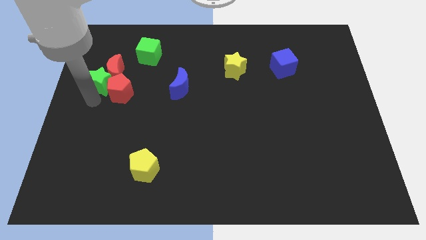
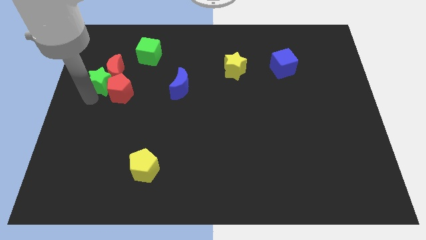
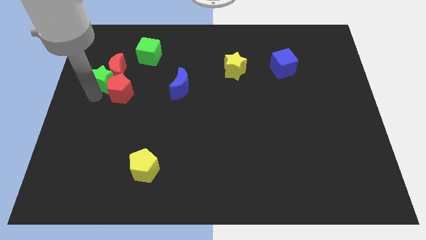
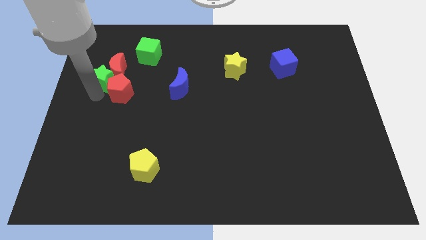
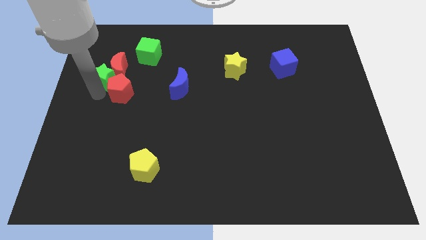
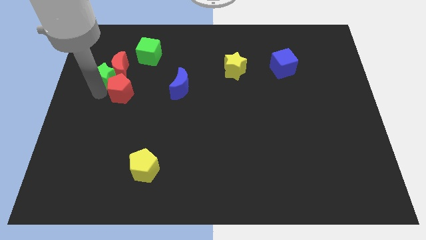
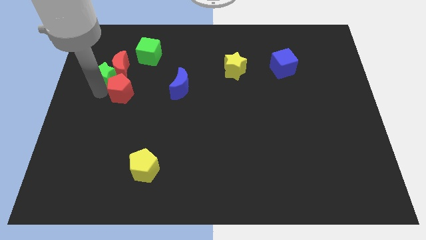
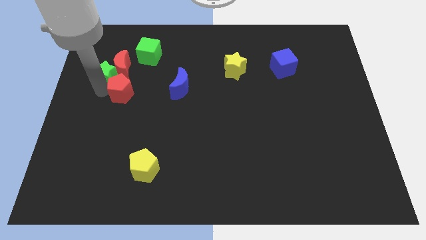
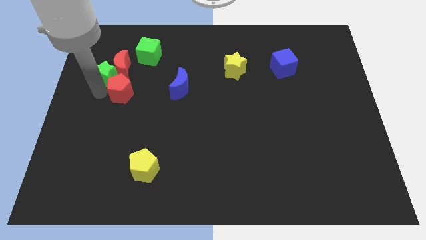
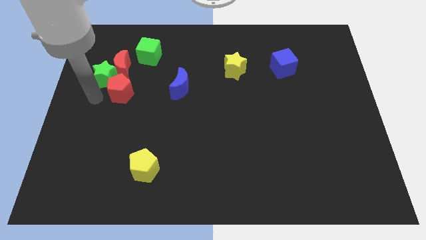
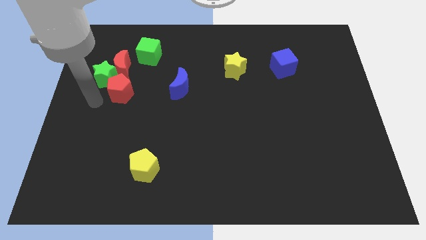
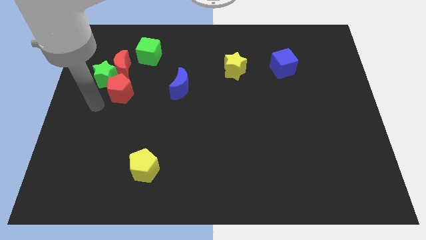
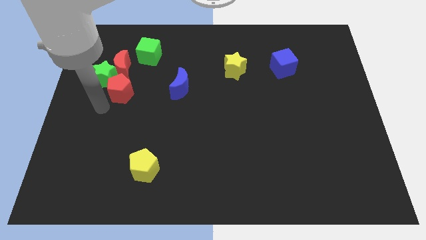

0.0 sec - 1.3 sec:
push the green star into the red crescent

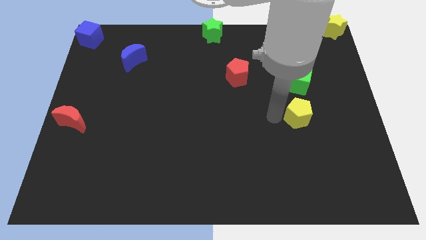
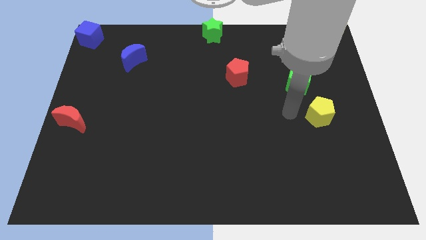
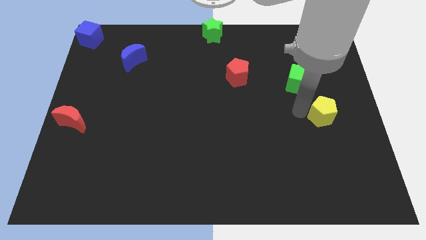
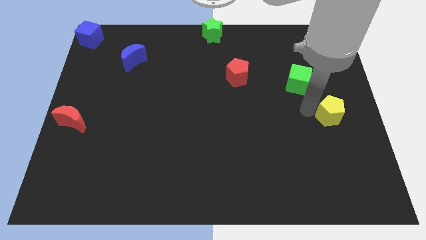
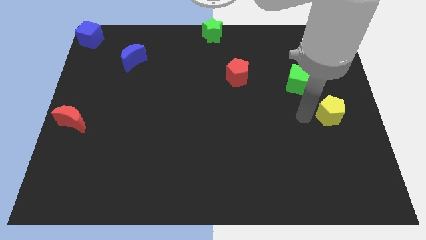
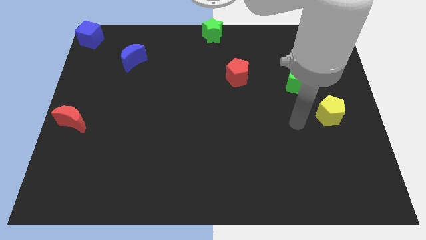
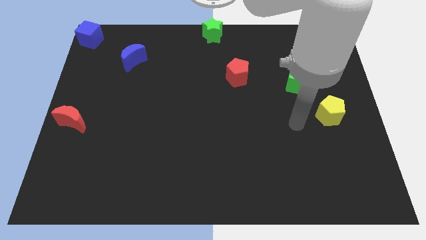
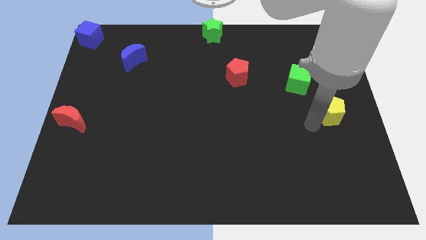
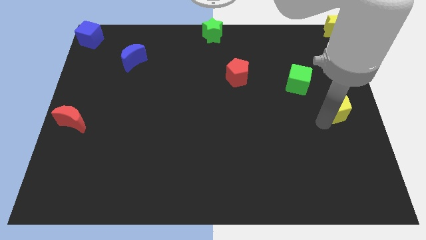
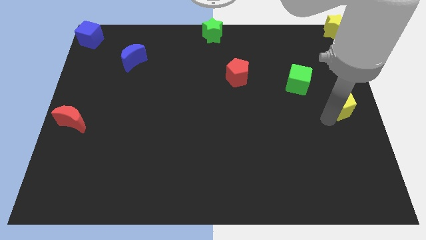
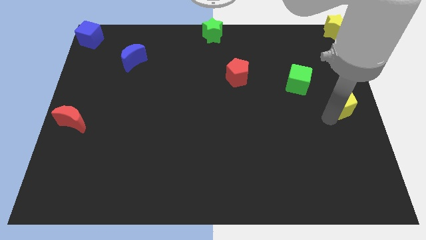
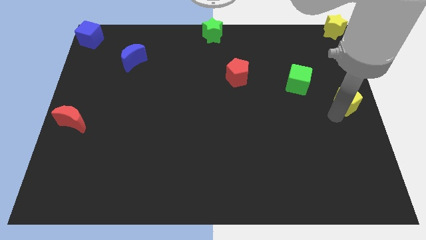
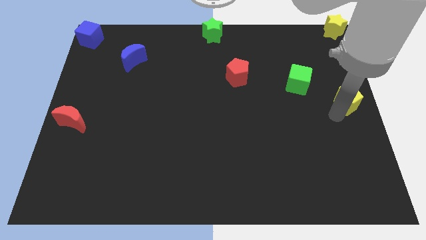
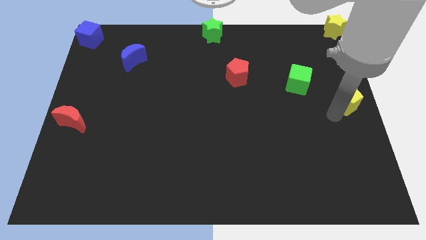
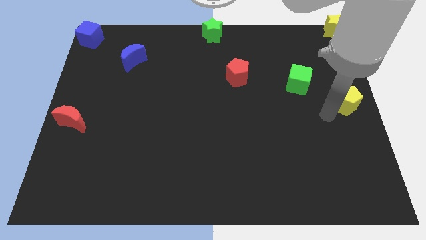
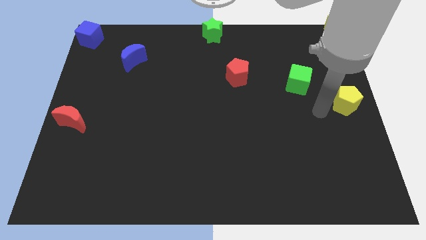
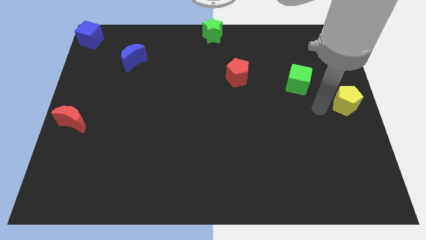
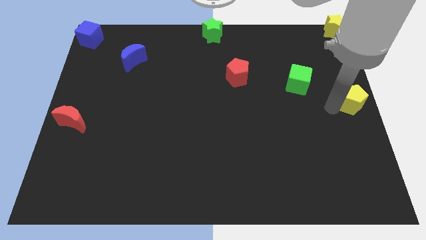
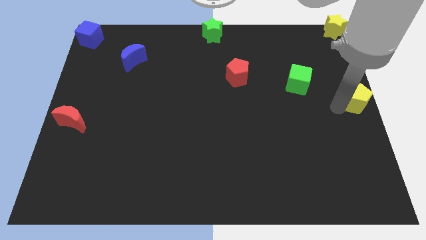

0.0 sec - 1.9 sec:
slide the yellow pentagon at the center right

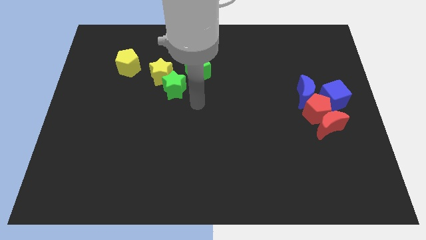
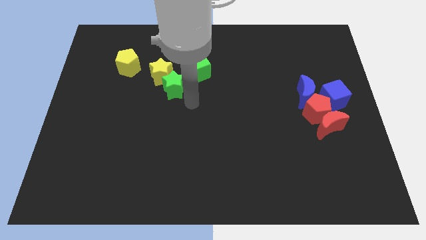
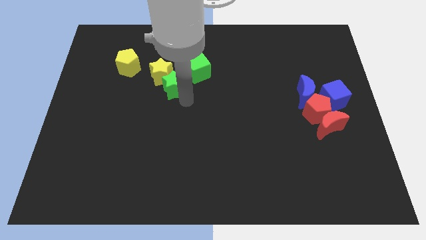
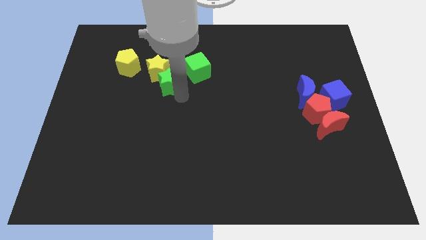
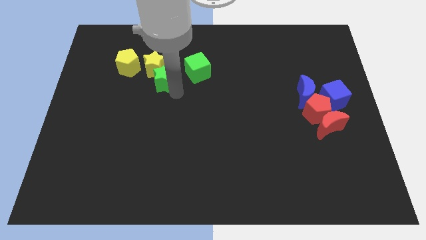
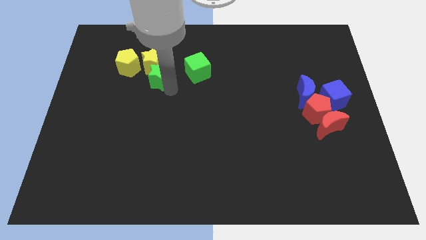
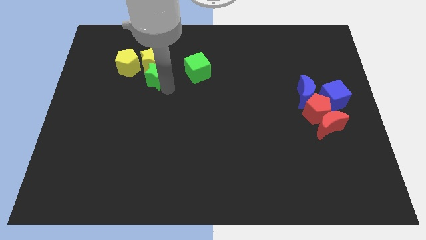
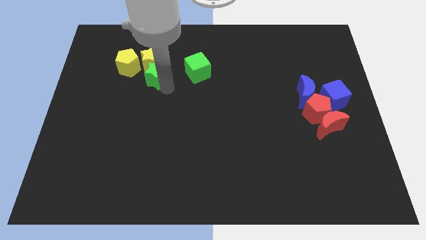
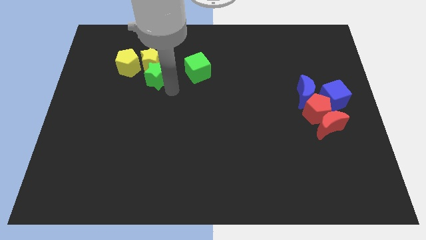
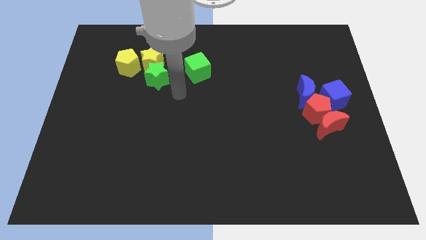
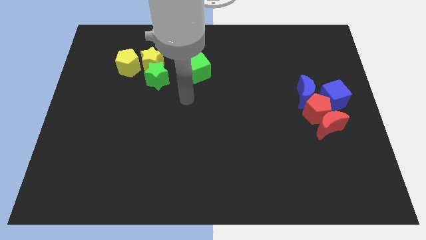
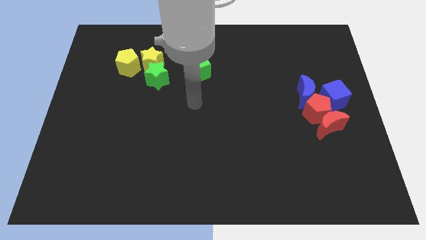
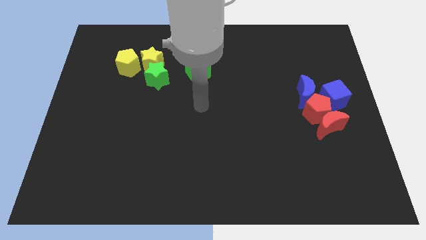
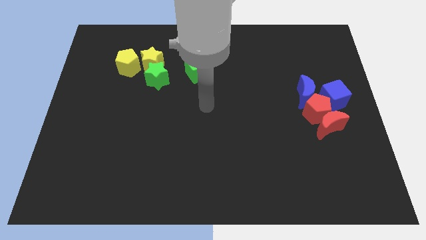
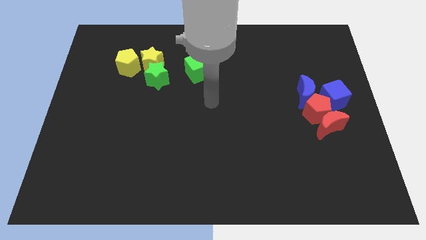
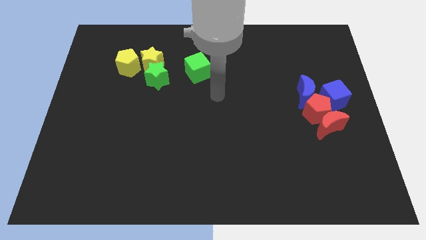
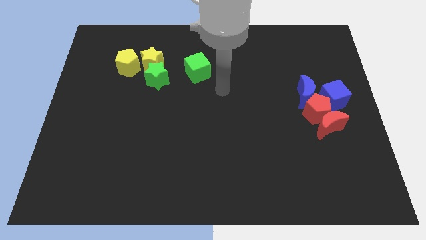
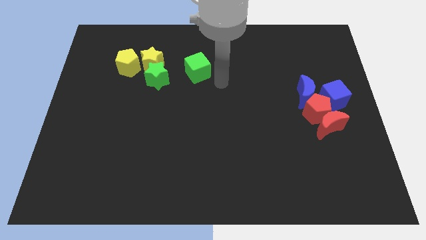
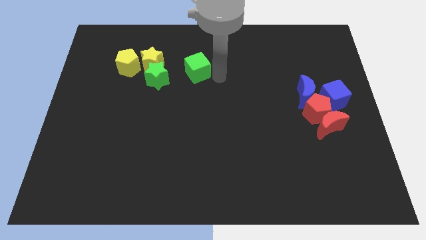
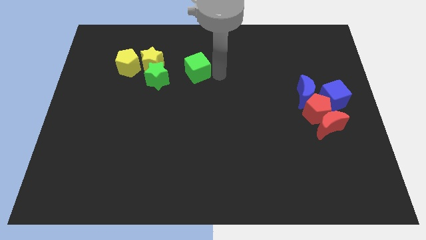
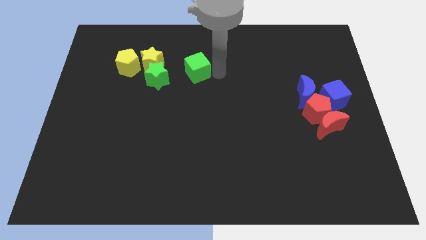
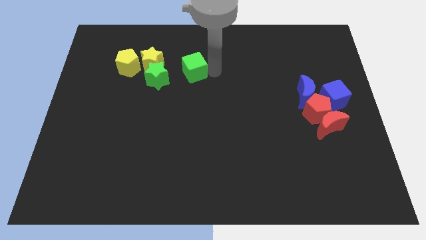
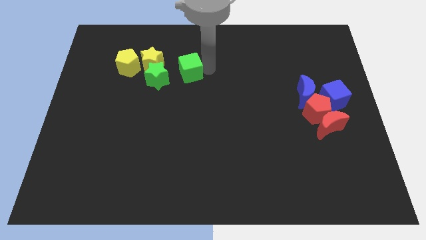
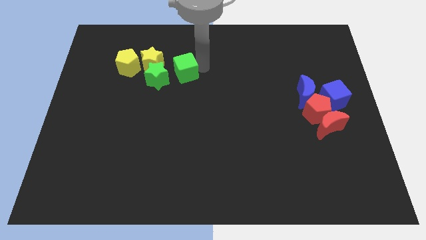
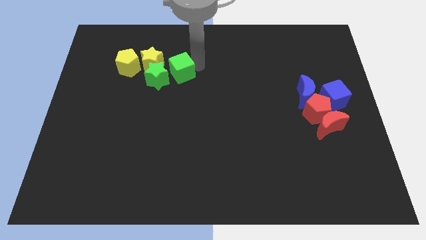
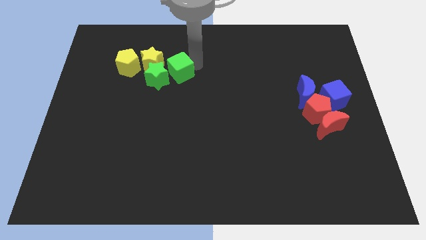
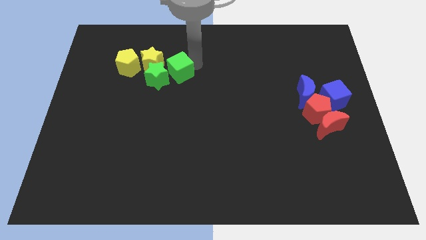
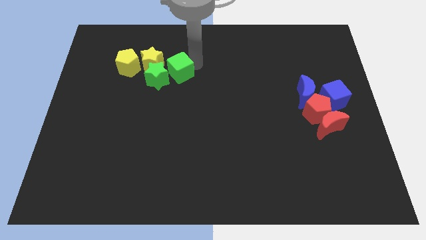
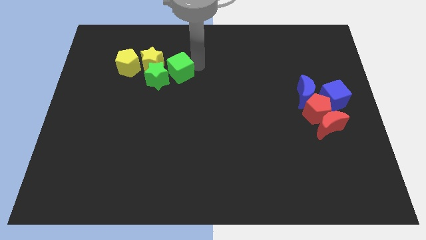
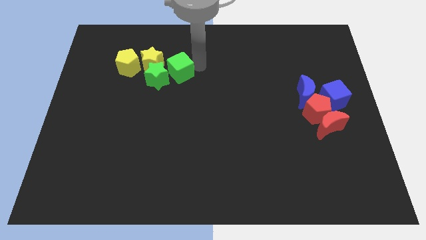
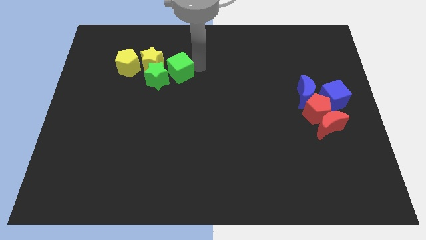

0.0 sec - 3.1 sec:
move yellow star and the green star towards right of yellow pentagon

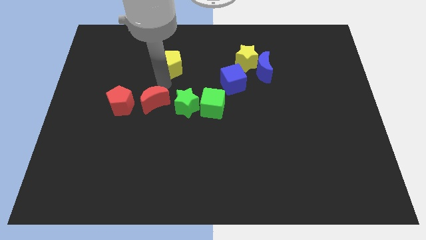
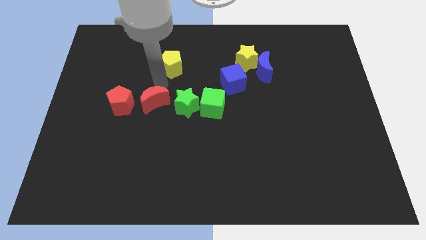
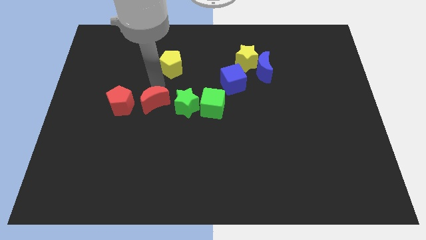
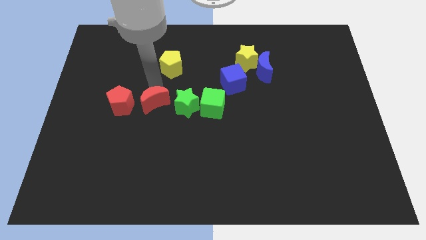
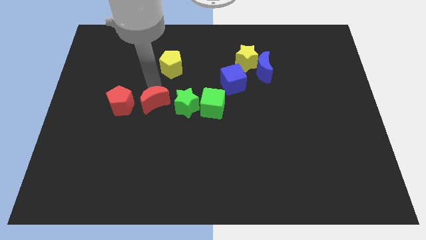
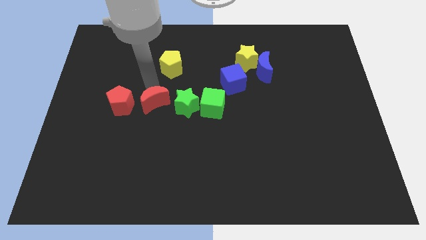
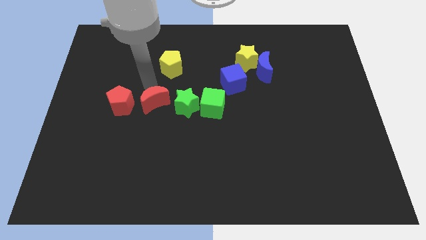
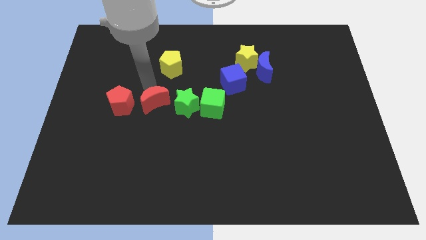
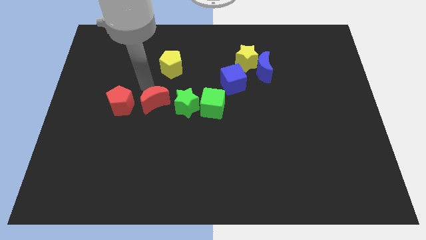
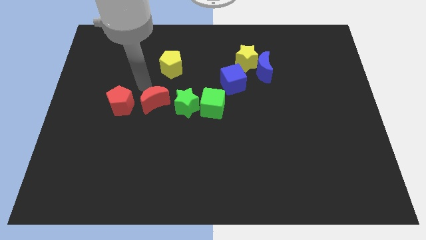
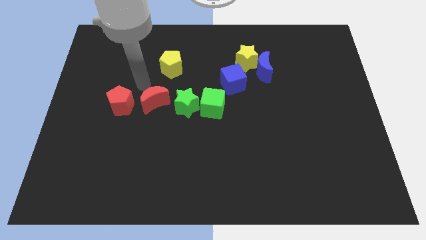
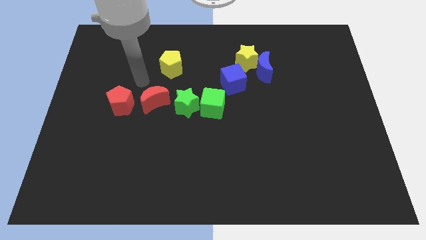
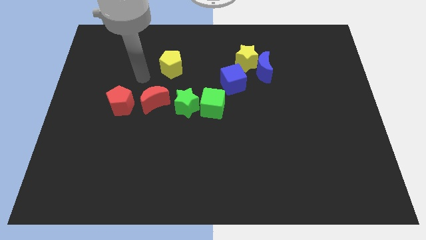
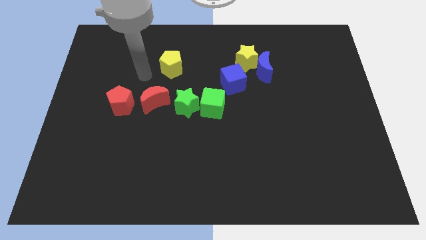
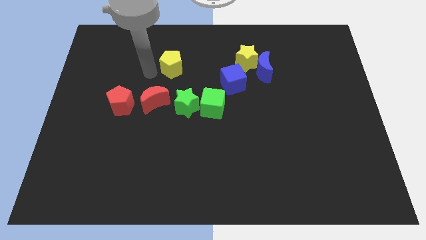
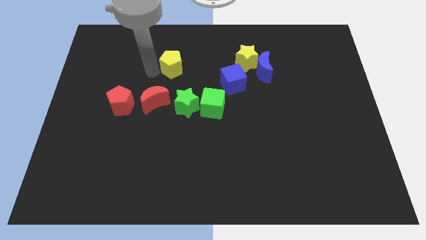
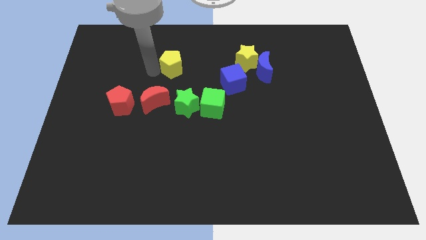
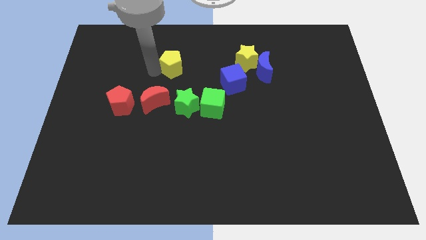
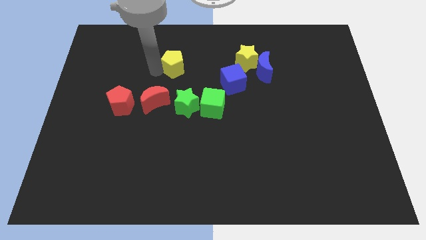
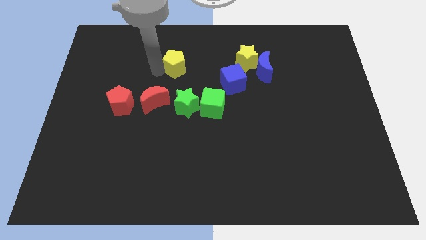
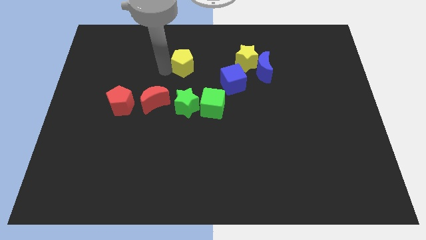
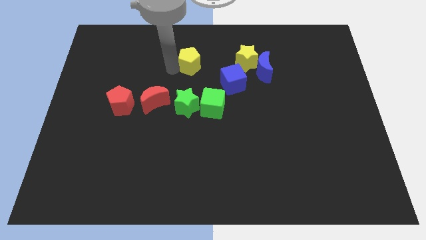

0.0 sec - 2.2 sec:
move the yellow pentagon above the green star

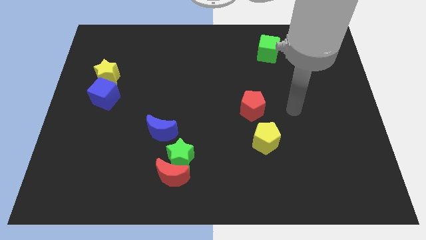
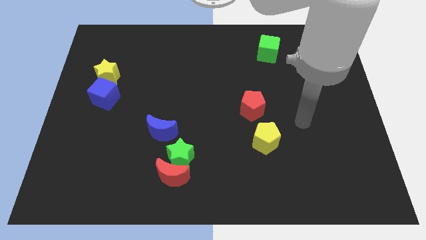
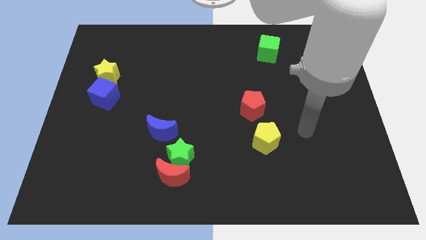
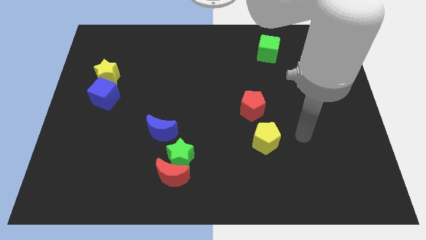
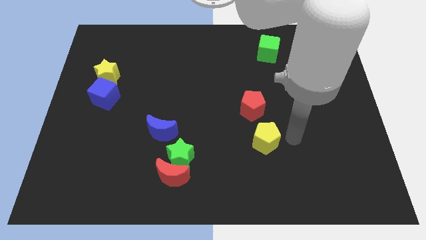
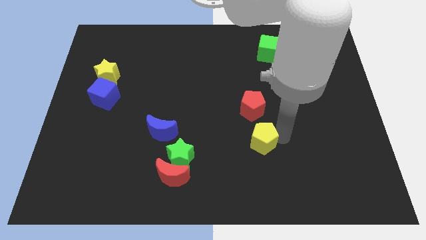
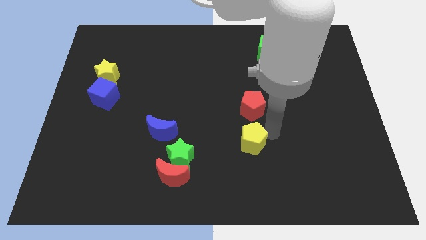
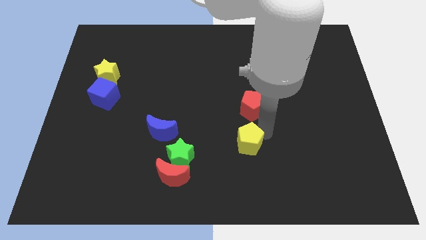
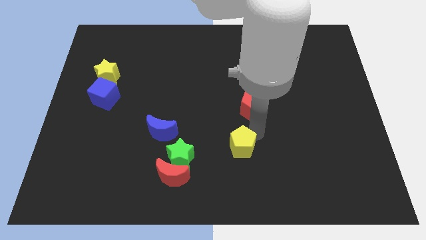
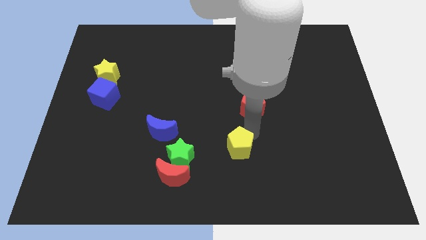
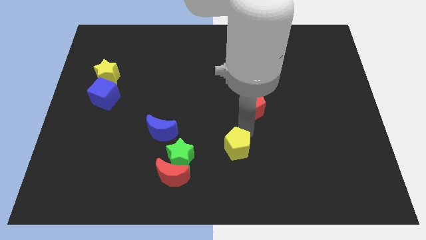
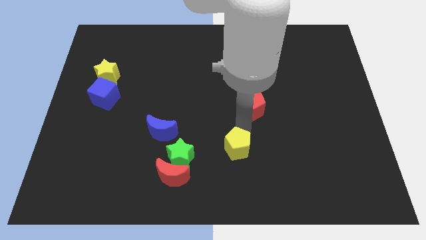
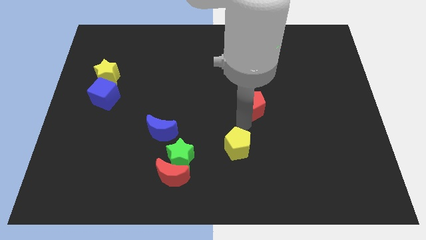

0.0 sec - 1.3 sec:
push the yellow pentagon towards the left side slightly
